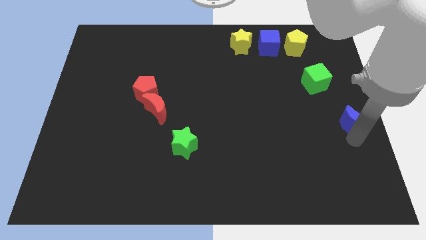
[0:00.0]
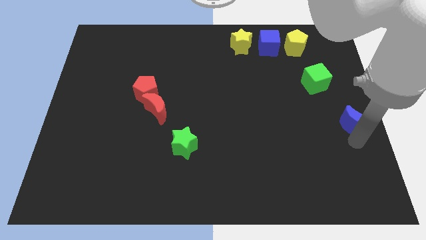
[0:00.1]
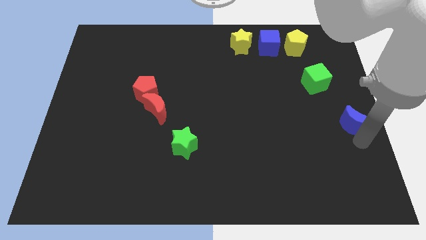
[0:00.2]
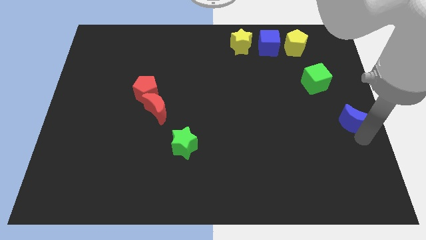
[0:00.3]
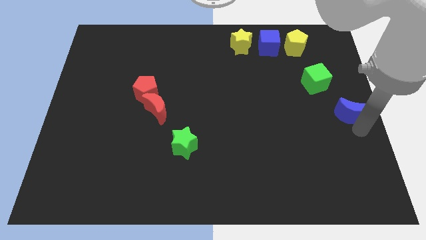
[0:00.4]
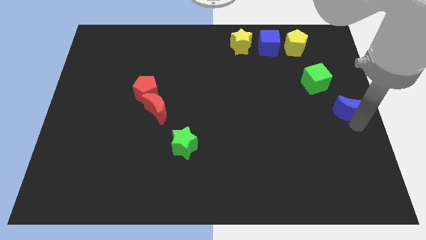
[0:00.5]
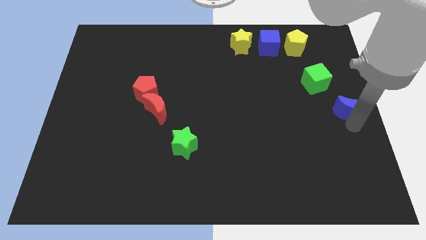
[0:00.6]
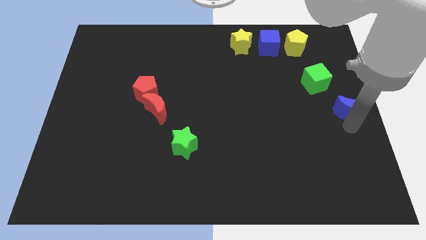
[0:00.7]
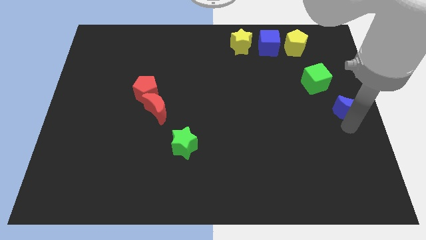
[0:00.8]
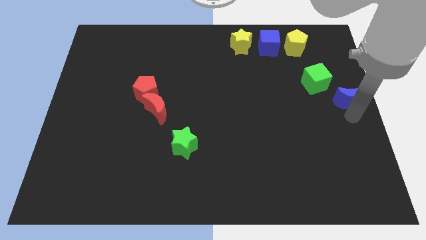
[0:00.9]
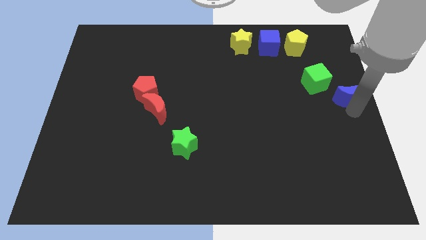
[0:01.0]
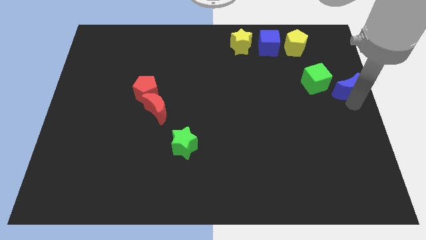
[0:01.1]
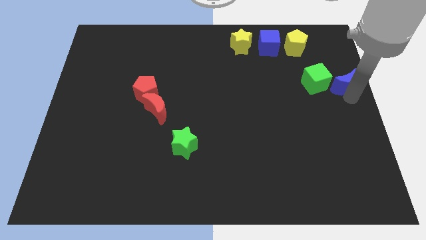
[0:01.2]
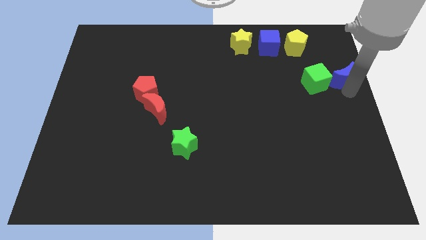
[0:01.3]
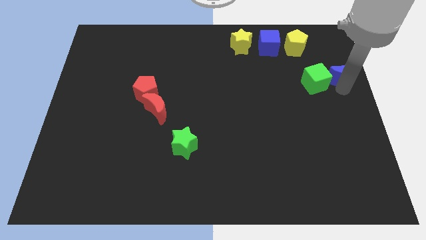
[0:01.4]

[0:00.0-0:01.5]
put the blue moon right to the green cube

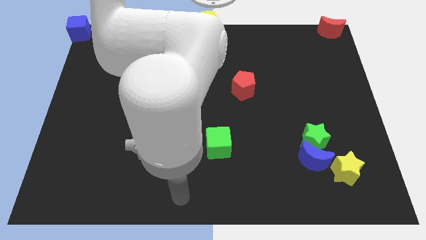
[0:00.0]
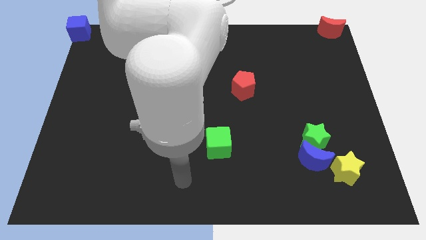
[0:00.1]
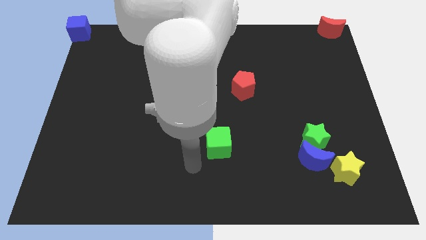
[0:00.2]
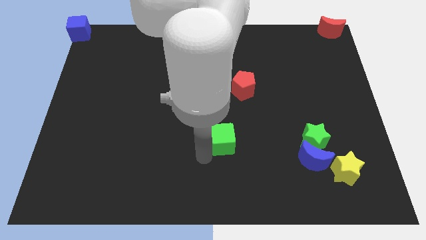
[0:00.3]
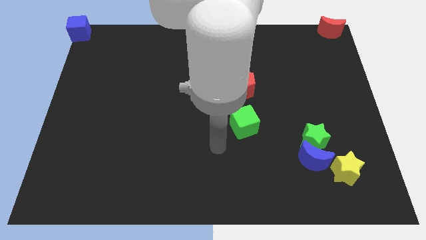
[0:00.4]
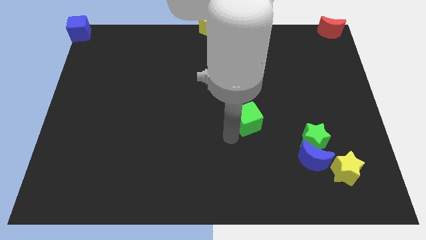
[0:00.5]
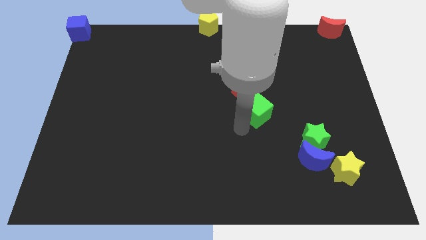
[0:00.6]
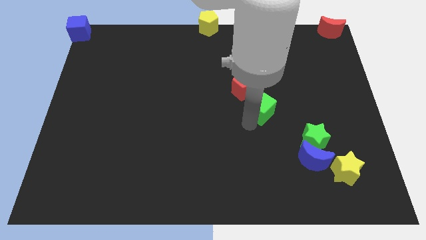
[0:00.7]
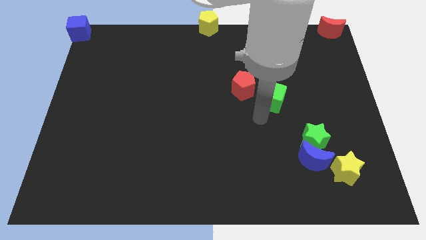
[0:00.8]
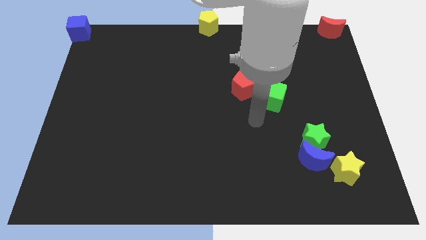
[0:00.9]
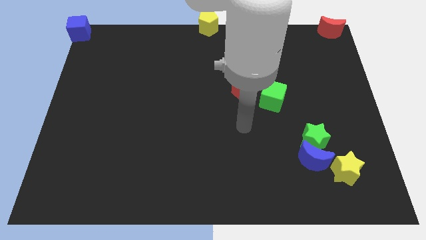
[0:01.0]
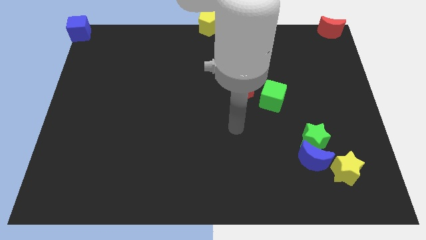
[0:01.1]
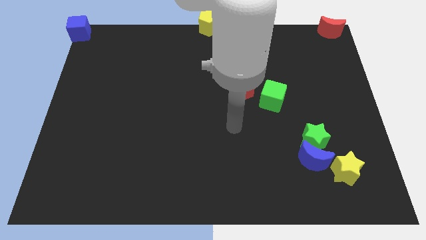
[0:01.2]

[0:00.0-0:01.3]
move the blue cube to the bottom right of the red pentagon

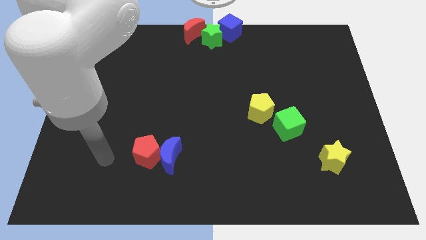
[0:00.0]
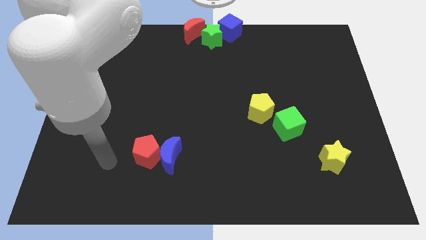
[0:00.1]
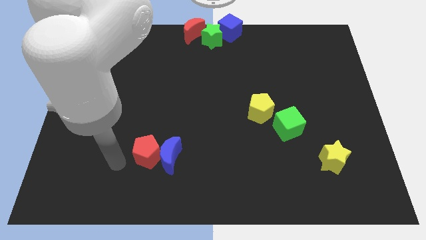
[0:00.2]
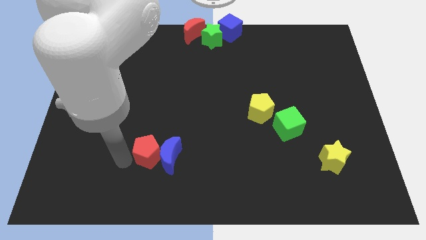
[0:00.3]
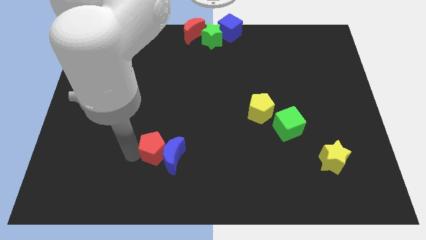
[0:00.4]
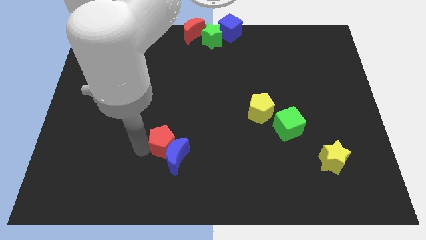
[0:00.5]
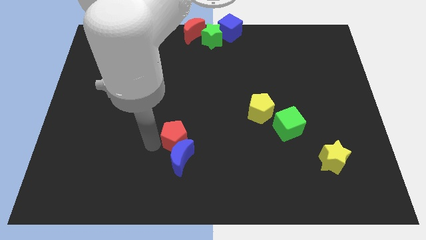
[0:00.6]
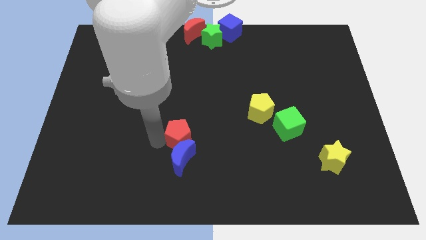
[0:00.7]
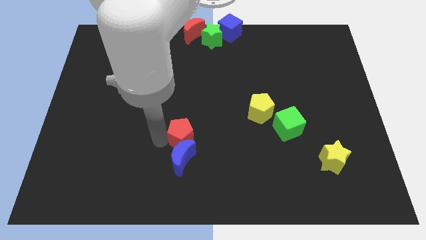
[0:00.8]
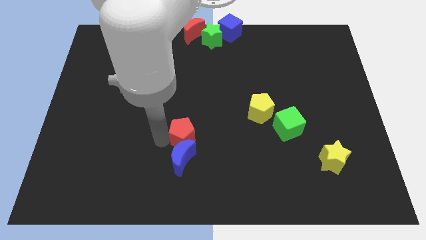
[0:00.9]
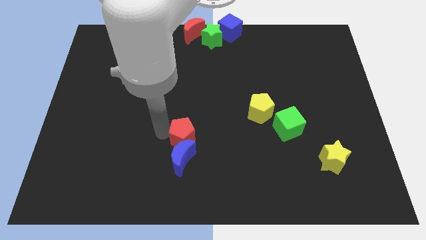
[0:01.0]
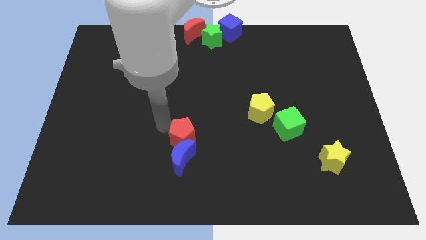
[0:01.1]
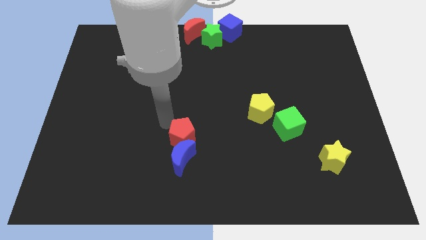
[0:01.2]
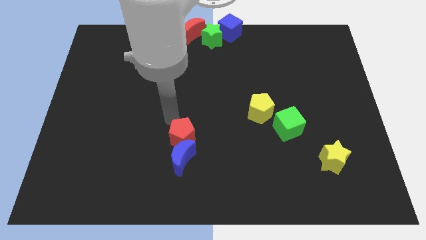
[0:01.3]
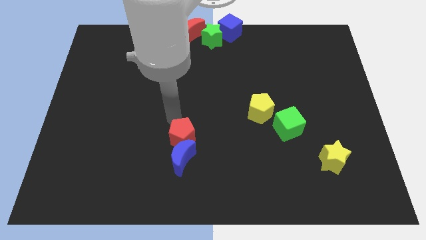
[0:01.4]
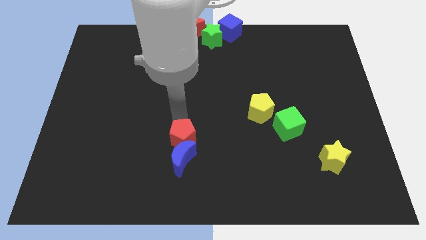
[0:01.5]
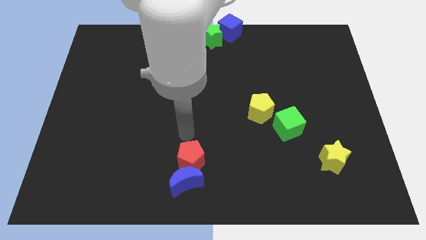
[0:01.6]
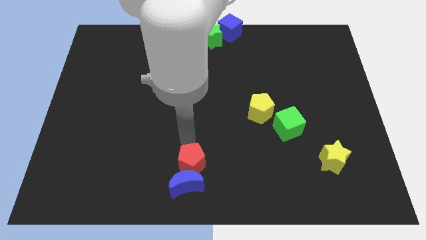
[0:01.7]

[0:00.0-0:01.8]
place the red pentagon above the blue moon

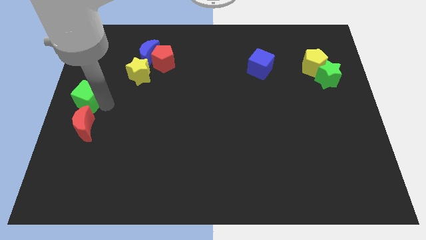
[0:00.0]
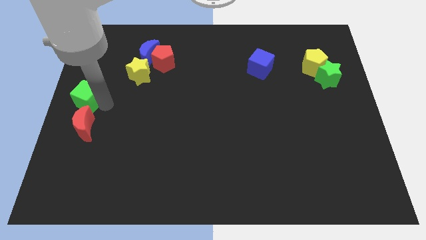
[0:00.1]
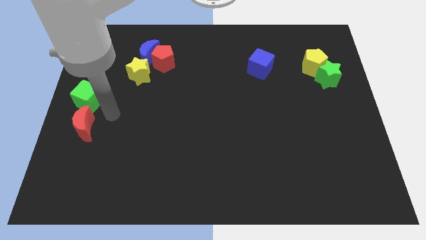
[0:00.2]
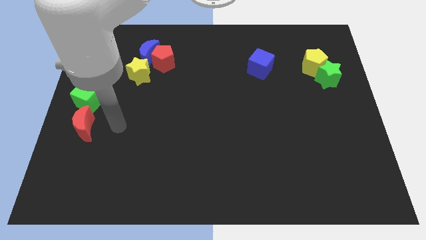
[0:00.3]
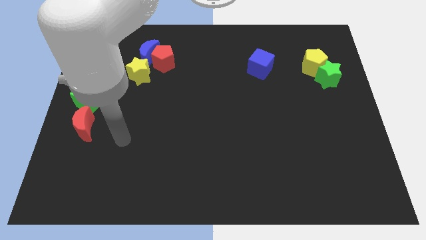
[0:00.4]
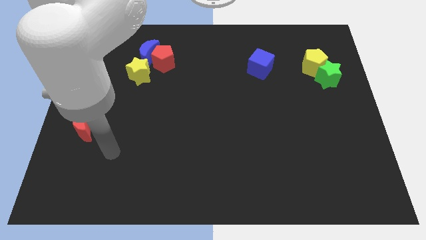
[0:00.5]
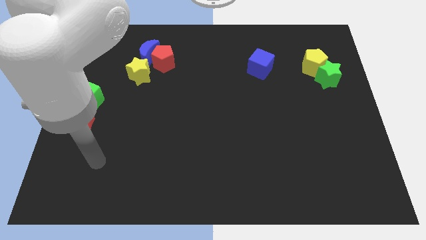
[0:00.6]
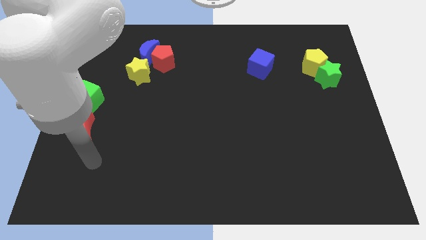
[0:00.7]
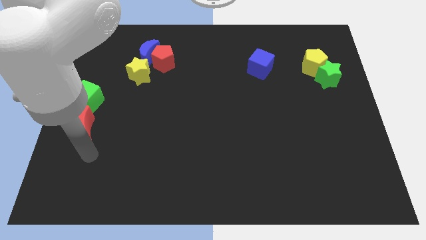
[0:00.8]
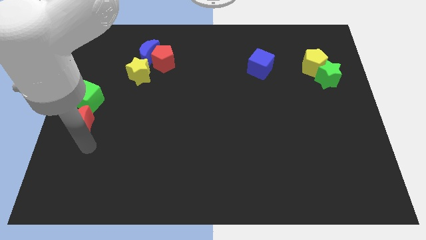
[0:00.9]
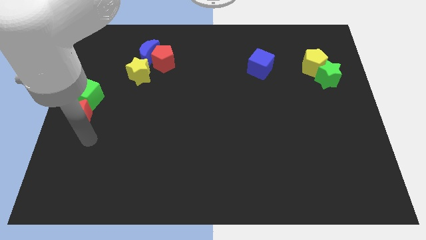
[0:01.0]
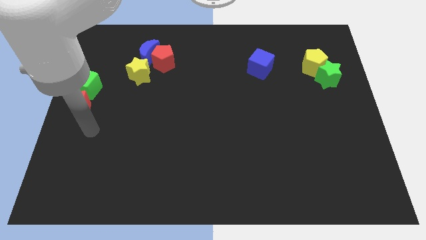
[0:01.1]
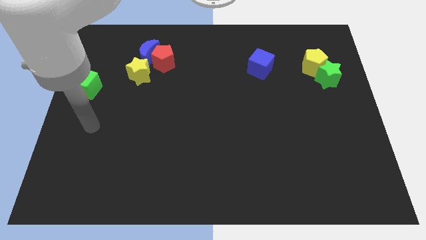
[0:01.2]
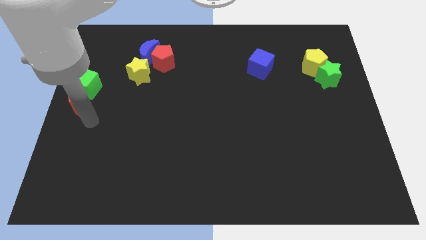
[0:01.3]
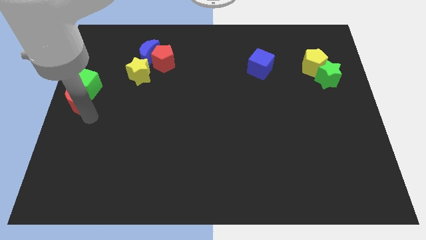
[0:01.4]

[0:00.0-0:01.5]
push the red crescent along with the green cube slightly to the top

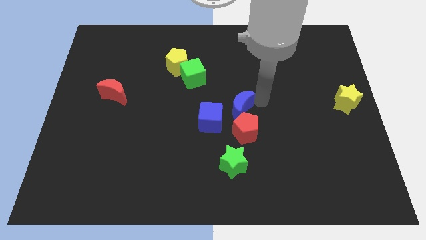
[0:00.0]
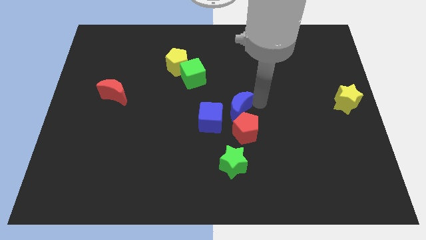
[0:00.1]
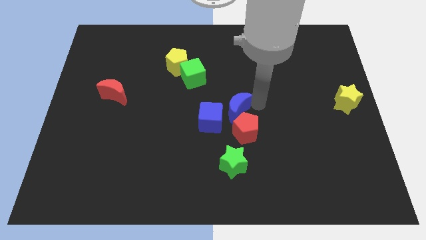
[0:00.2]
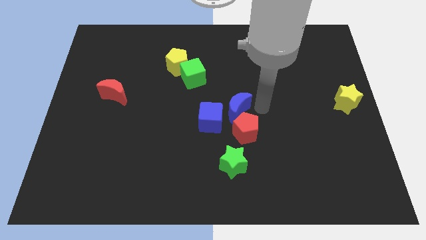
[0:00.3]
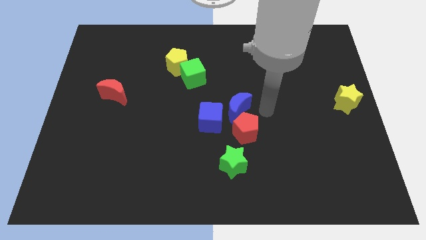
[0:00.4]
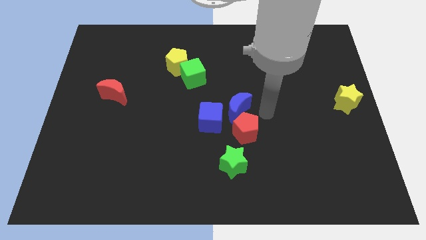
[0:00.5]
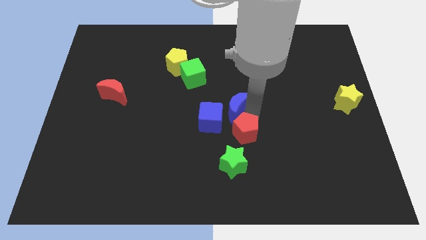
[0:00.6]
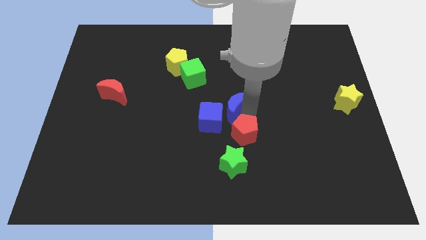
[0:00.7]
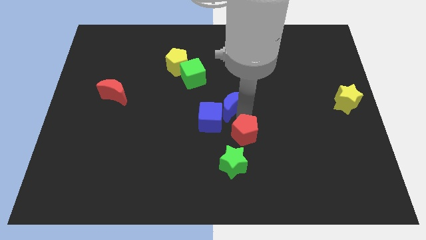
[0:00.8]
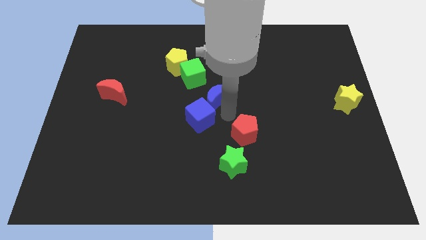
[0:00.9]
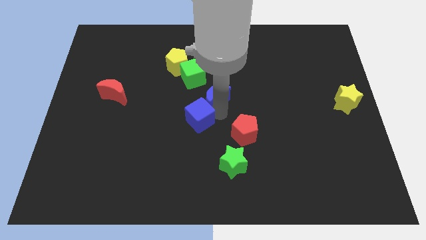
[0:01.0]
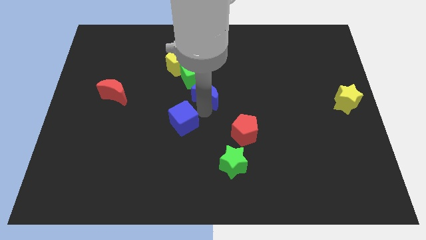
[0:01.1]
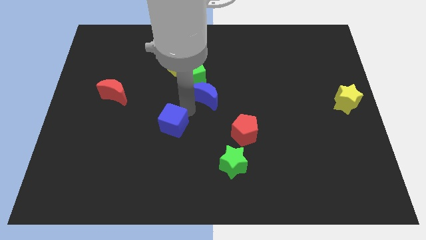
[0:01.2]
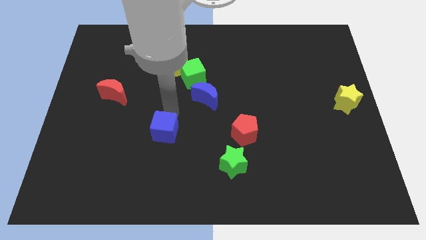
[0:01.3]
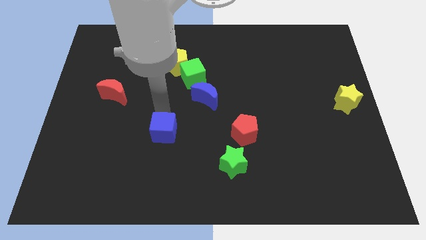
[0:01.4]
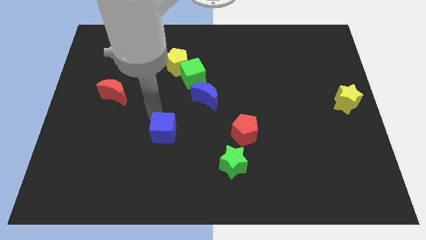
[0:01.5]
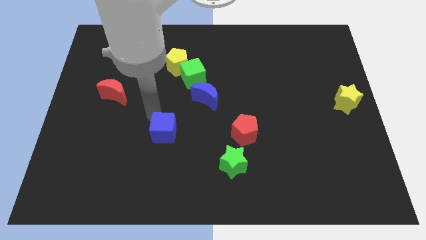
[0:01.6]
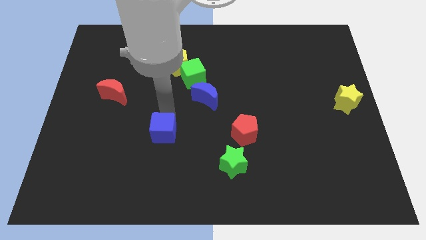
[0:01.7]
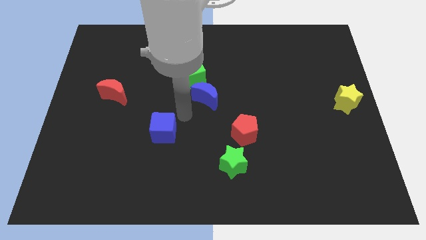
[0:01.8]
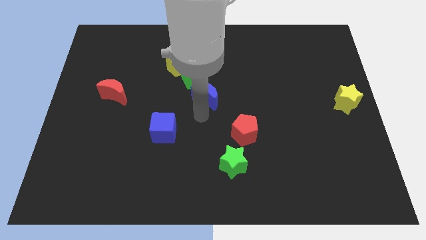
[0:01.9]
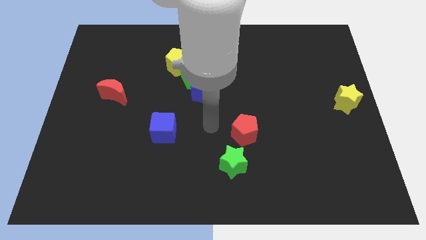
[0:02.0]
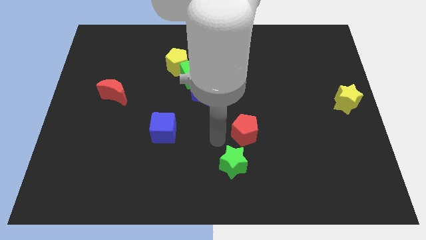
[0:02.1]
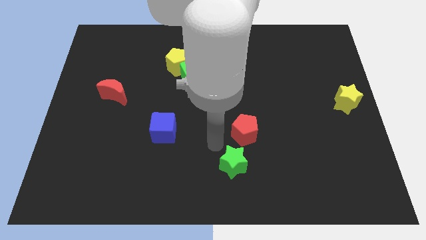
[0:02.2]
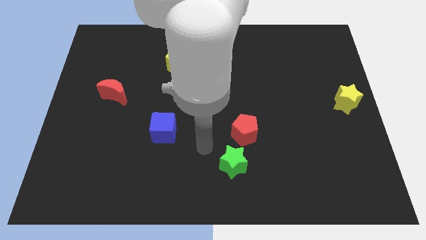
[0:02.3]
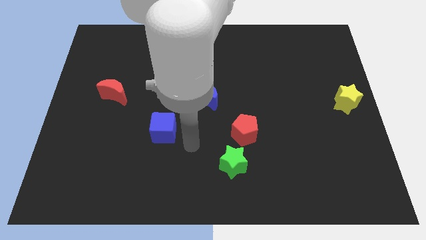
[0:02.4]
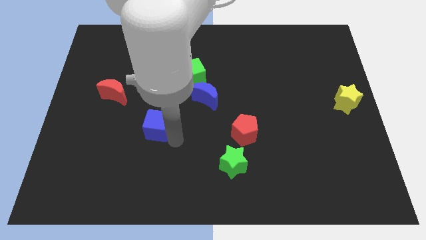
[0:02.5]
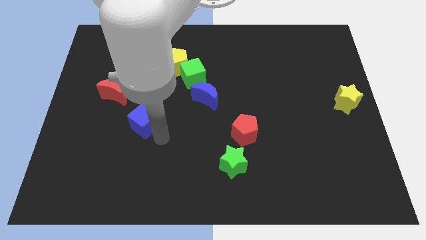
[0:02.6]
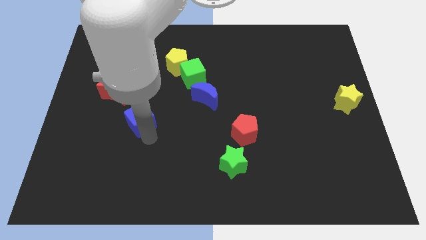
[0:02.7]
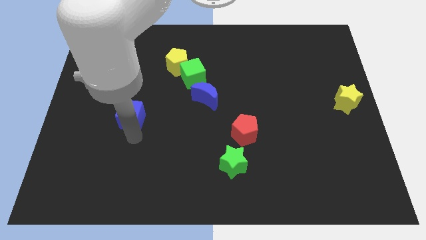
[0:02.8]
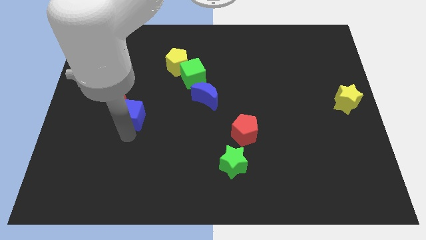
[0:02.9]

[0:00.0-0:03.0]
move the blue cube diagonally below the red crescent
